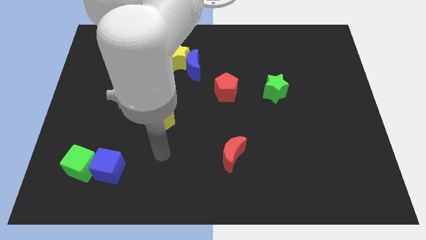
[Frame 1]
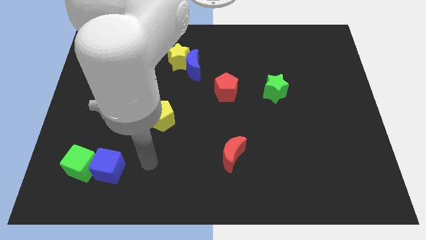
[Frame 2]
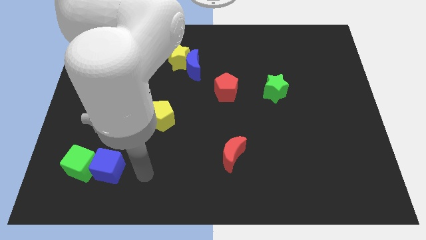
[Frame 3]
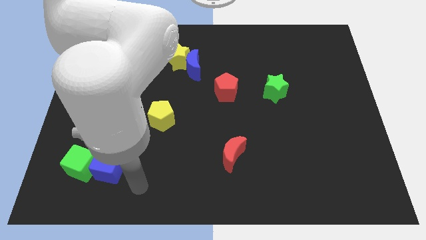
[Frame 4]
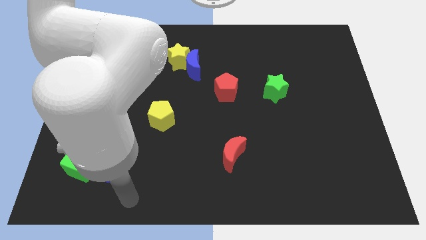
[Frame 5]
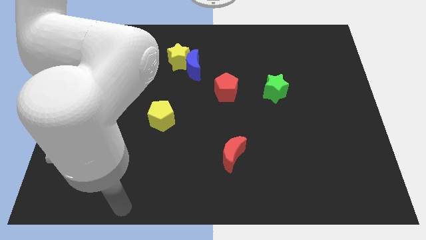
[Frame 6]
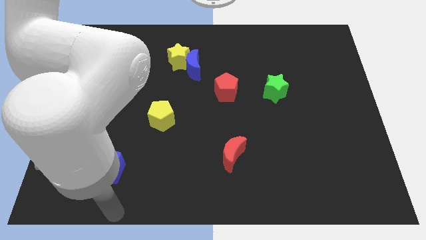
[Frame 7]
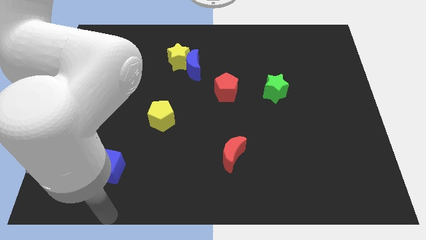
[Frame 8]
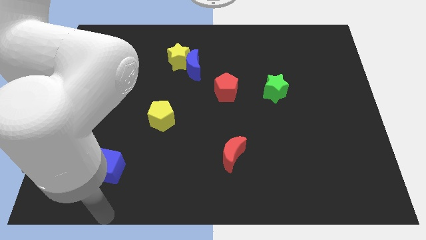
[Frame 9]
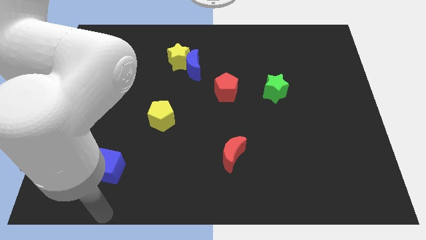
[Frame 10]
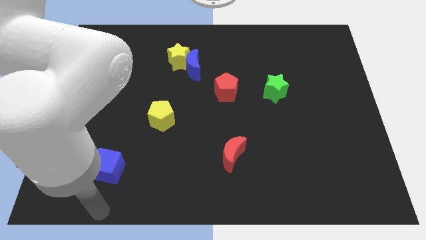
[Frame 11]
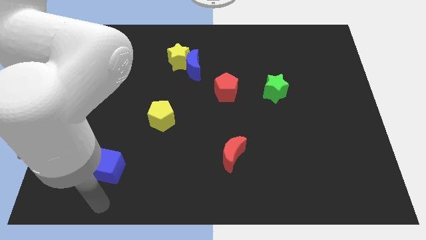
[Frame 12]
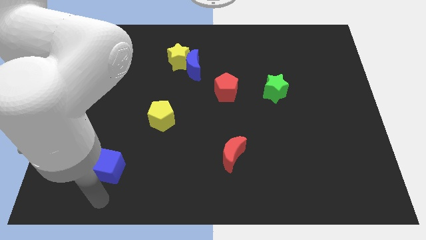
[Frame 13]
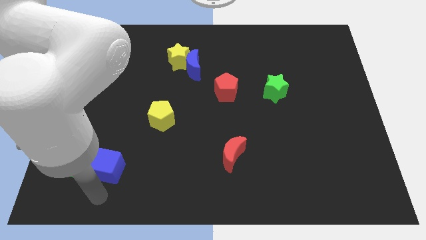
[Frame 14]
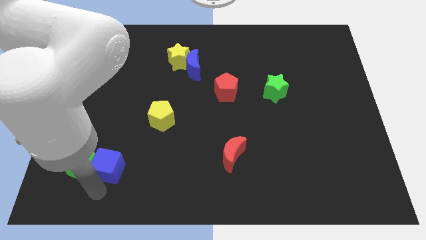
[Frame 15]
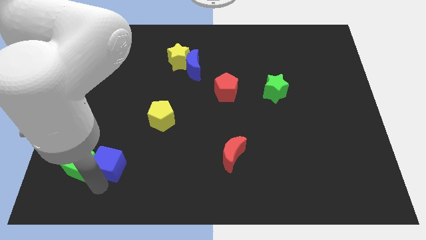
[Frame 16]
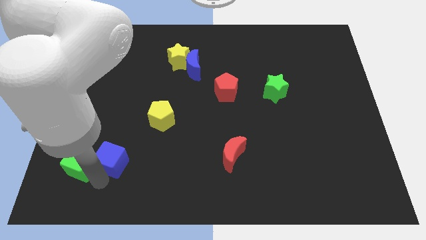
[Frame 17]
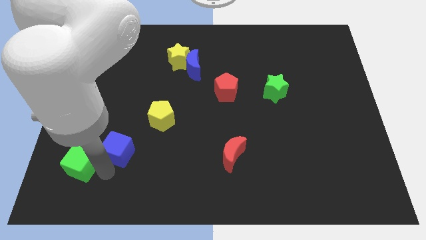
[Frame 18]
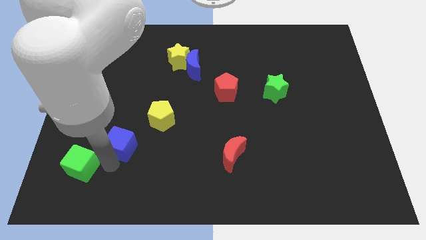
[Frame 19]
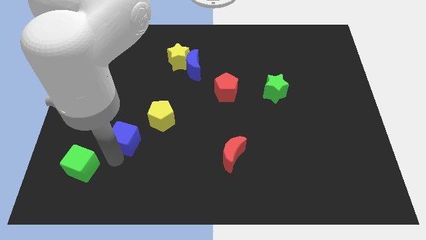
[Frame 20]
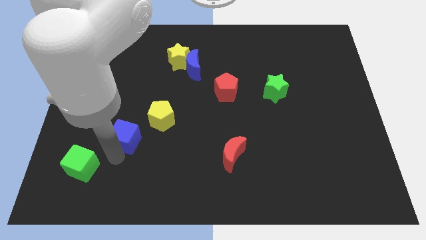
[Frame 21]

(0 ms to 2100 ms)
separate blue cube from green cube

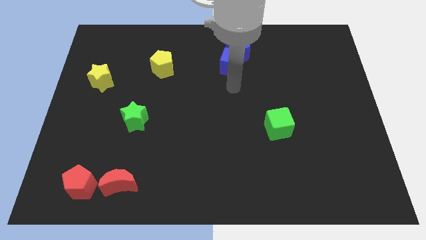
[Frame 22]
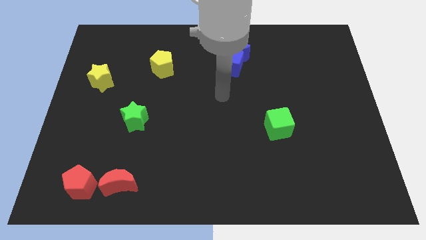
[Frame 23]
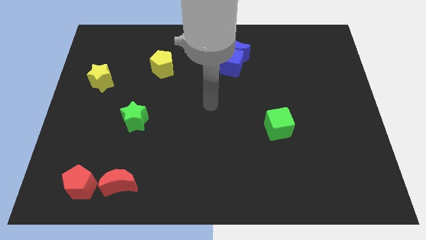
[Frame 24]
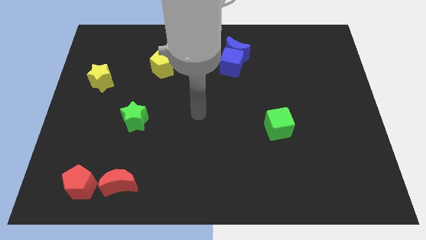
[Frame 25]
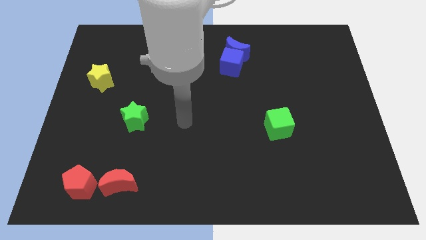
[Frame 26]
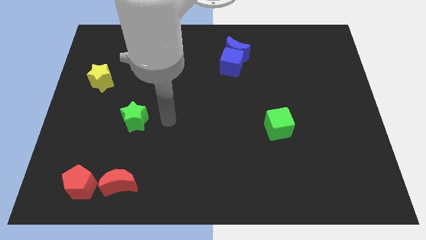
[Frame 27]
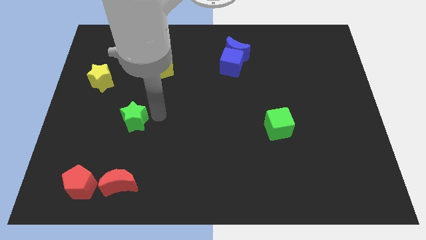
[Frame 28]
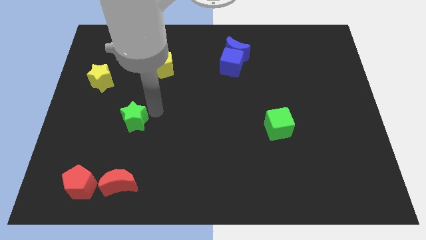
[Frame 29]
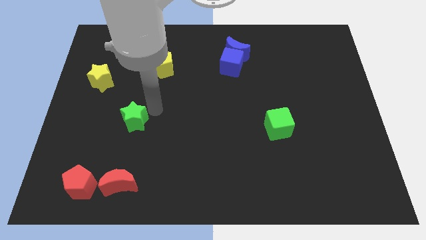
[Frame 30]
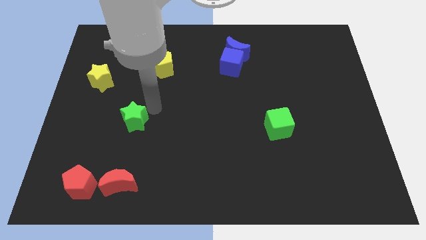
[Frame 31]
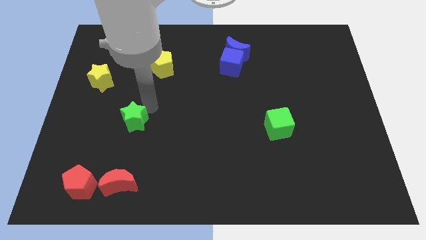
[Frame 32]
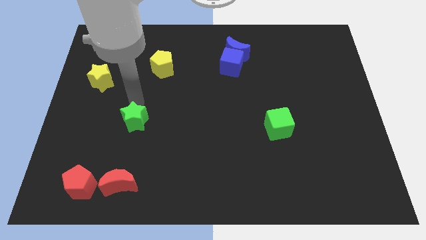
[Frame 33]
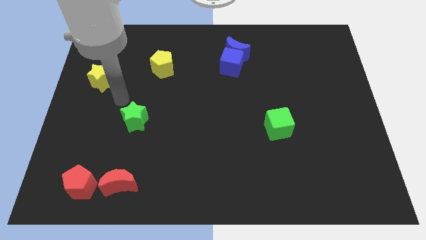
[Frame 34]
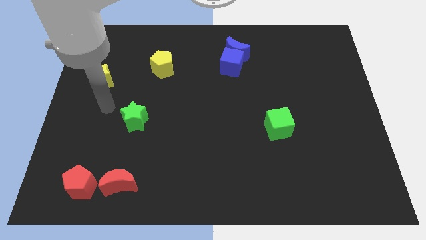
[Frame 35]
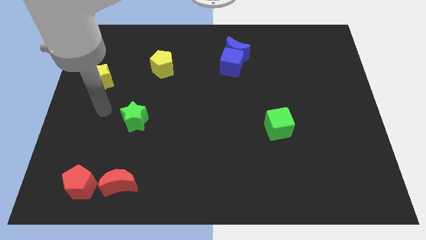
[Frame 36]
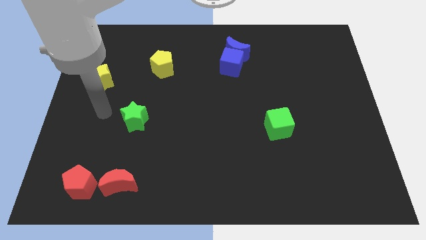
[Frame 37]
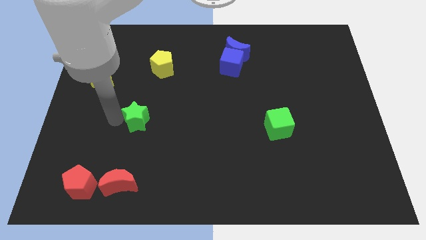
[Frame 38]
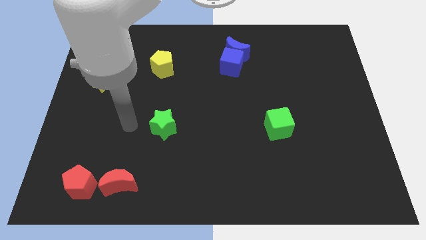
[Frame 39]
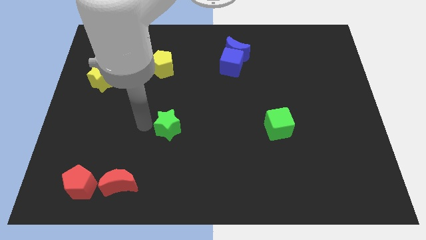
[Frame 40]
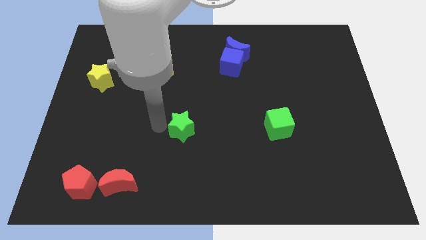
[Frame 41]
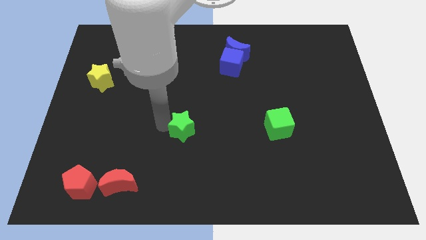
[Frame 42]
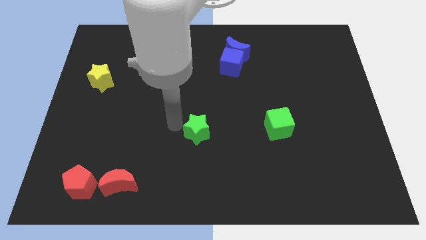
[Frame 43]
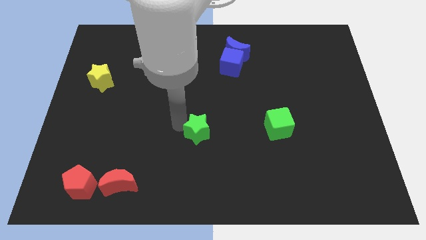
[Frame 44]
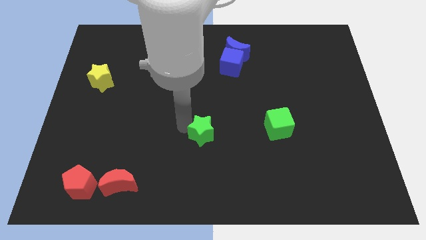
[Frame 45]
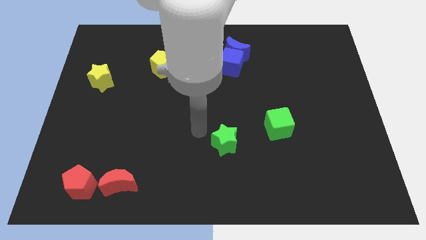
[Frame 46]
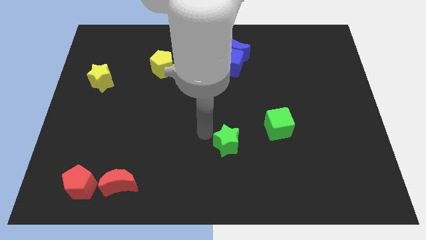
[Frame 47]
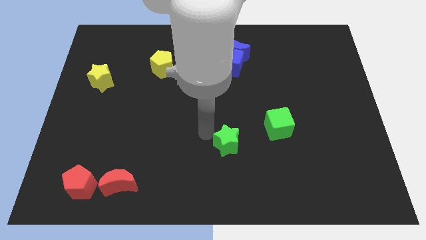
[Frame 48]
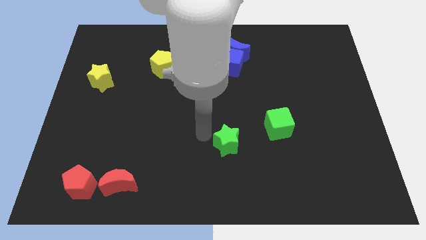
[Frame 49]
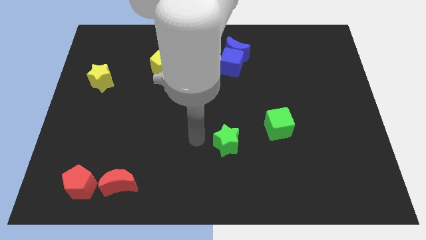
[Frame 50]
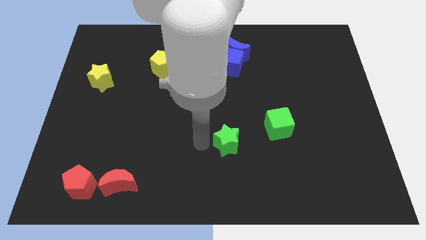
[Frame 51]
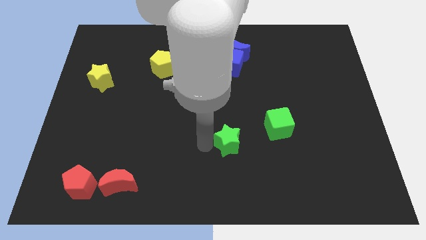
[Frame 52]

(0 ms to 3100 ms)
place green star to the horizontal left of green cube

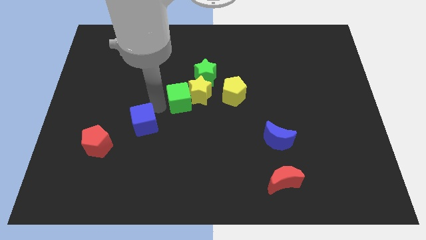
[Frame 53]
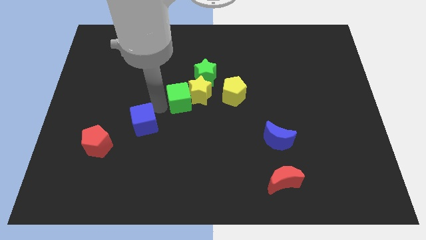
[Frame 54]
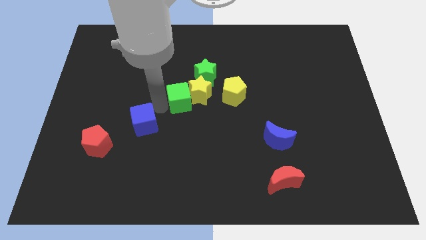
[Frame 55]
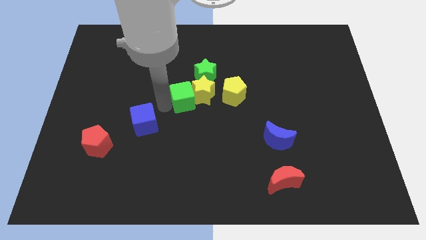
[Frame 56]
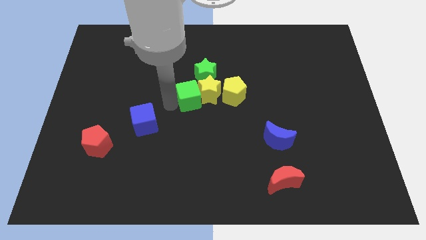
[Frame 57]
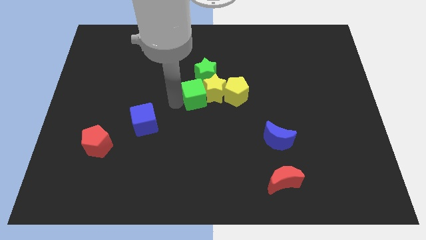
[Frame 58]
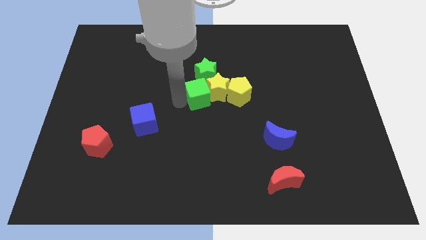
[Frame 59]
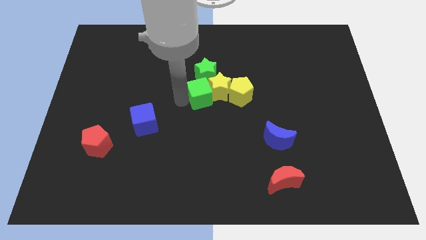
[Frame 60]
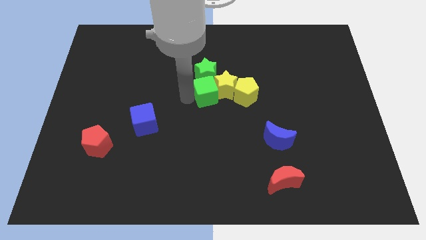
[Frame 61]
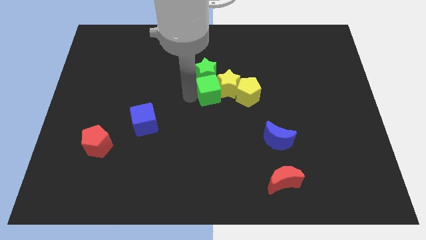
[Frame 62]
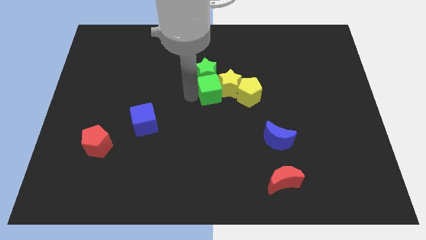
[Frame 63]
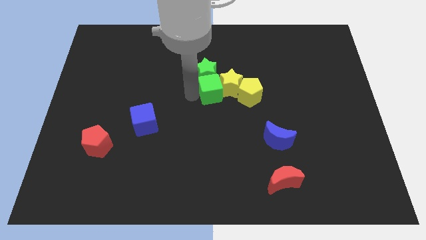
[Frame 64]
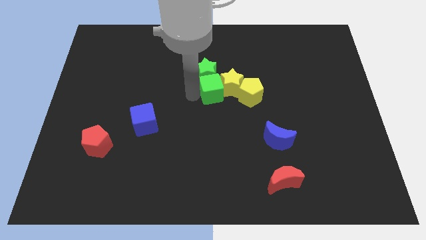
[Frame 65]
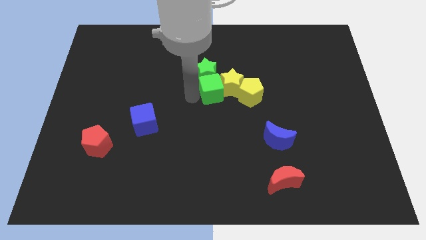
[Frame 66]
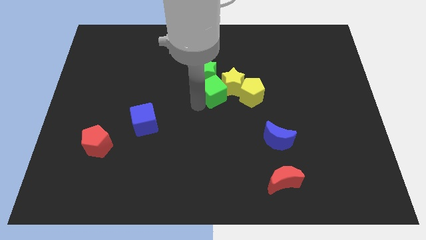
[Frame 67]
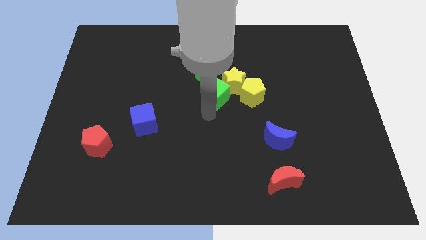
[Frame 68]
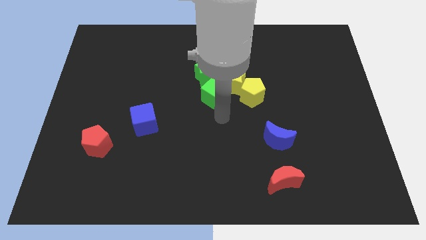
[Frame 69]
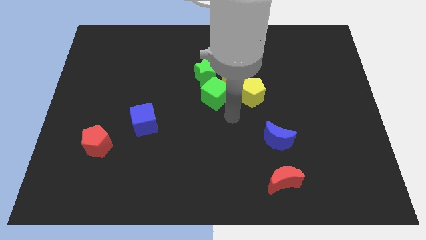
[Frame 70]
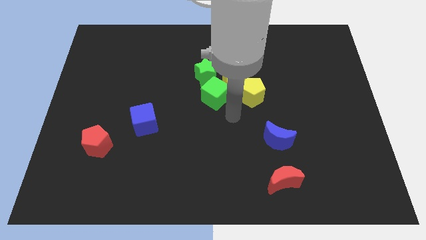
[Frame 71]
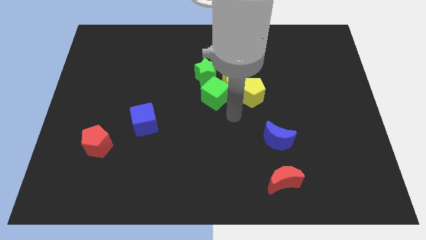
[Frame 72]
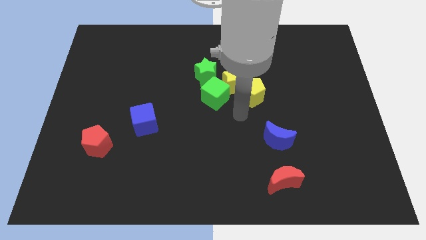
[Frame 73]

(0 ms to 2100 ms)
move both green cube and yellow star slightly to the center of the board

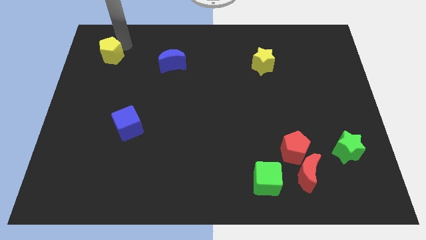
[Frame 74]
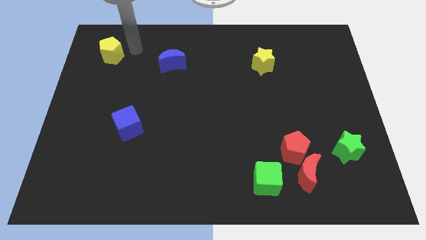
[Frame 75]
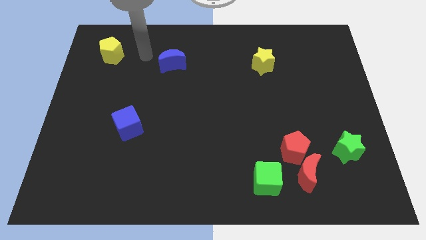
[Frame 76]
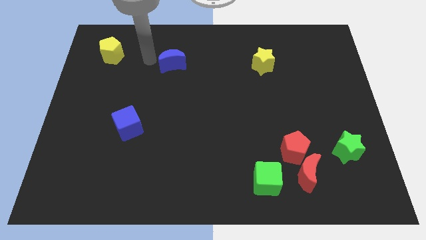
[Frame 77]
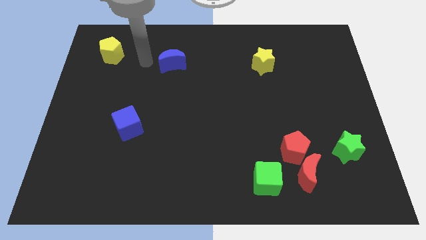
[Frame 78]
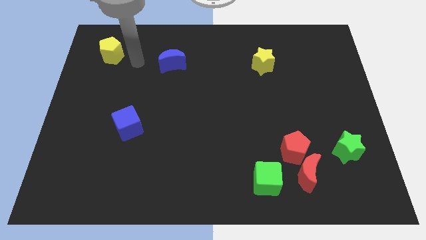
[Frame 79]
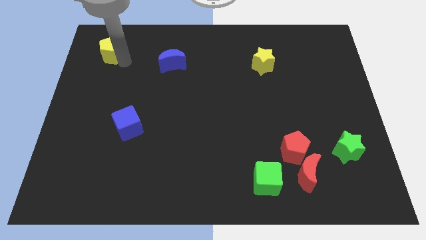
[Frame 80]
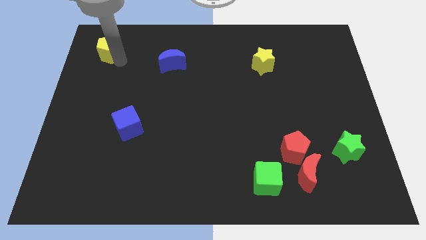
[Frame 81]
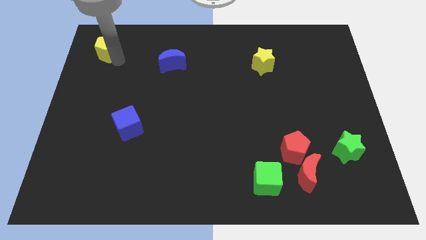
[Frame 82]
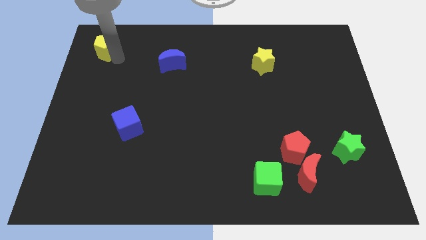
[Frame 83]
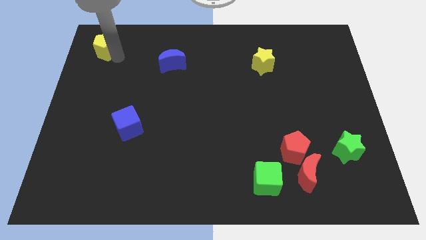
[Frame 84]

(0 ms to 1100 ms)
push yellow pentagon to the top left

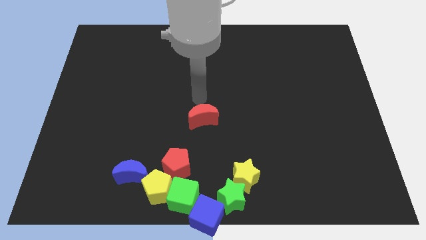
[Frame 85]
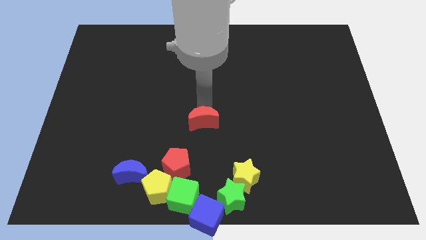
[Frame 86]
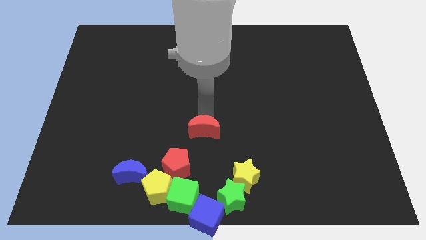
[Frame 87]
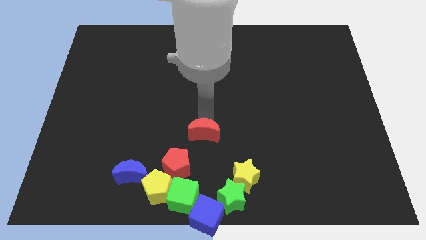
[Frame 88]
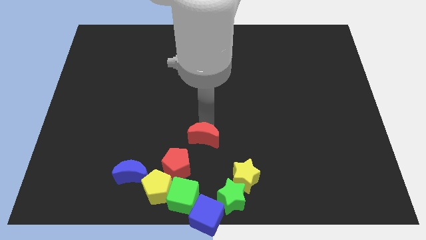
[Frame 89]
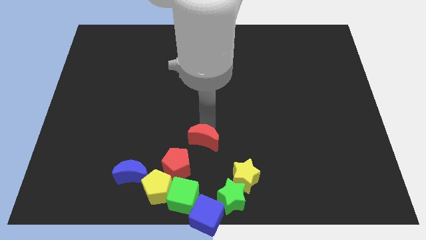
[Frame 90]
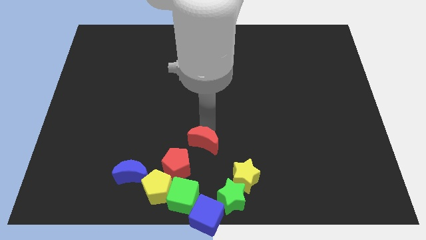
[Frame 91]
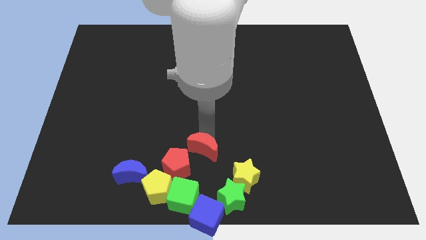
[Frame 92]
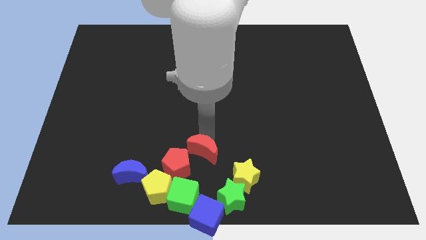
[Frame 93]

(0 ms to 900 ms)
slide the red moon to the top right side of the red pentagon
